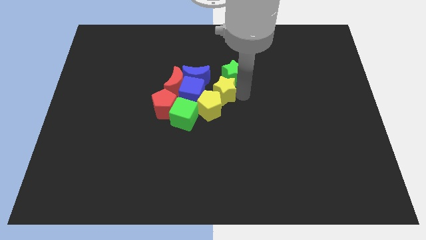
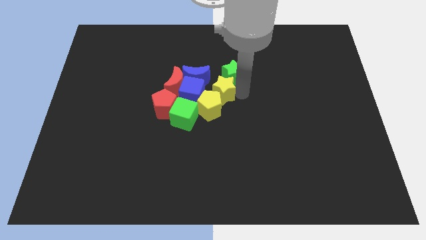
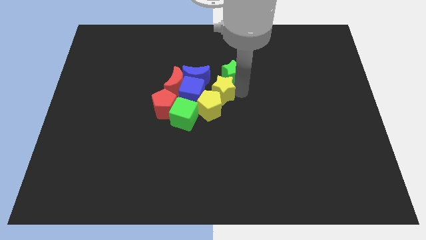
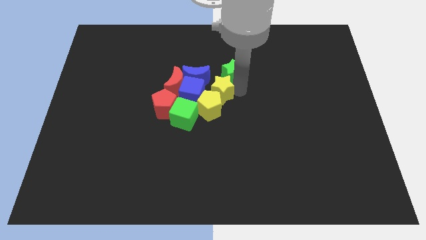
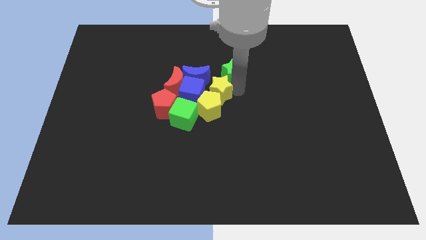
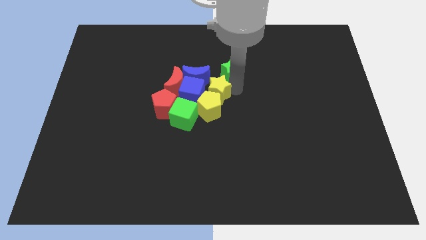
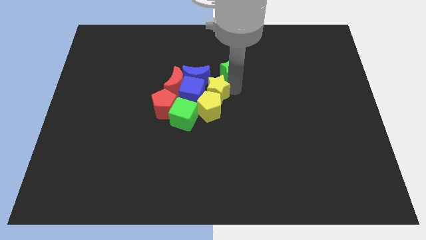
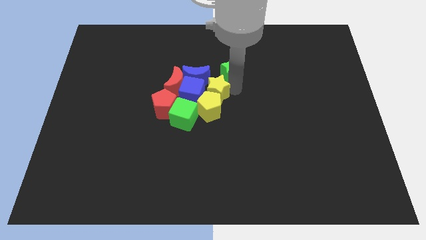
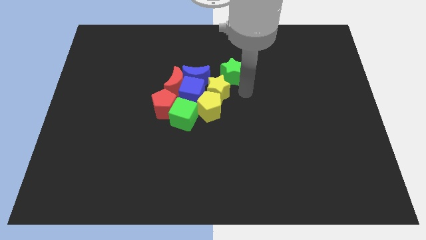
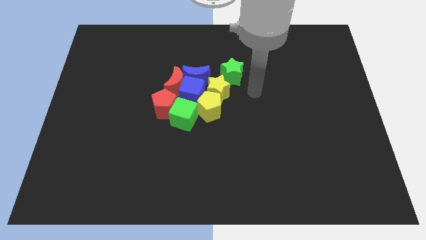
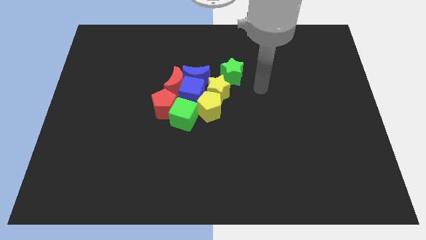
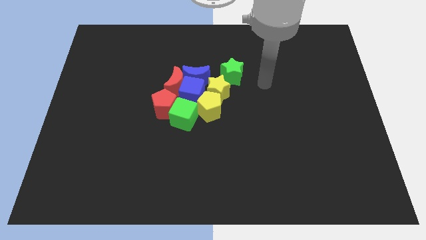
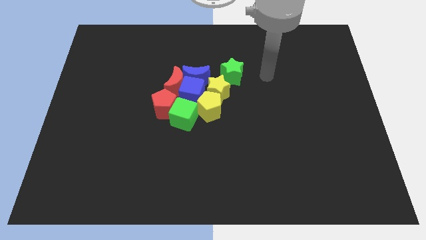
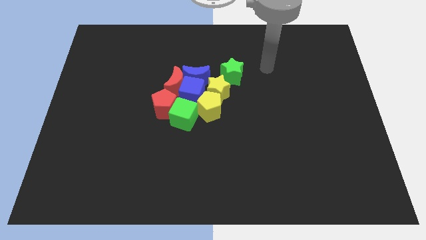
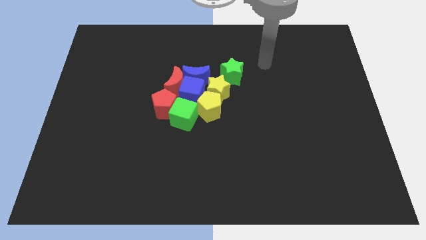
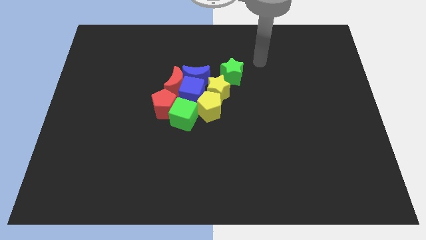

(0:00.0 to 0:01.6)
place the yellow star above the yellow pentagon

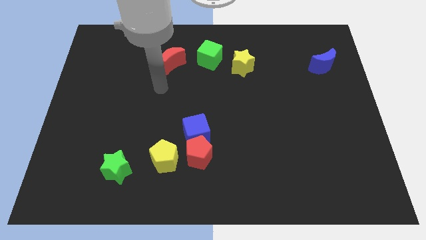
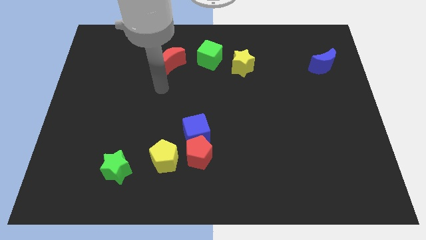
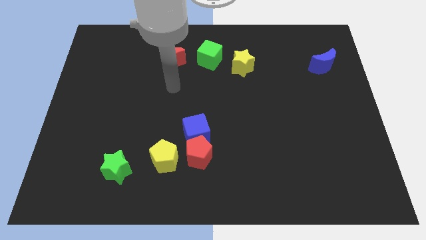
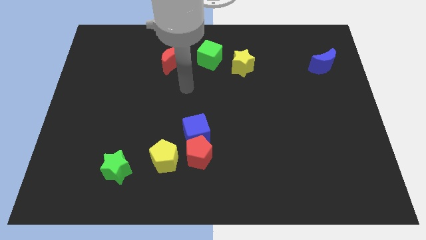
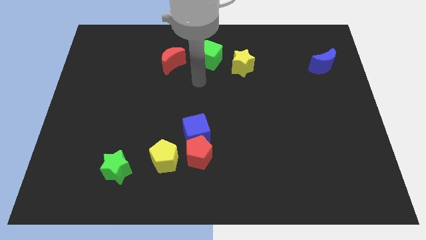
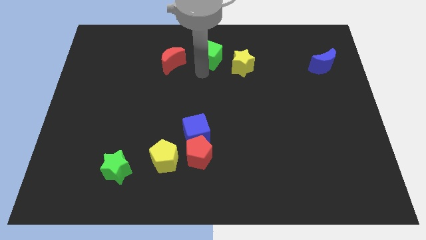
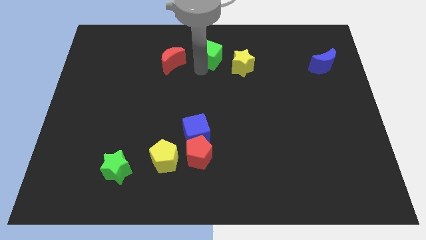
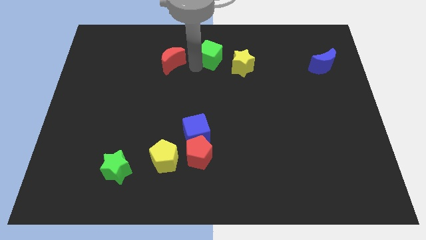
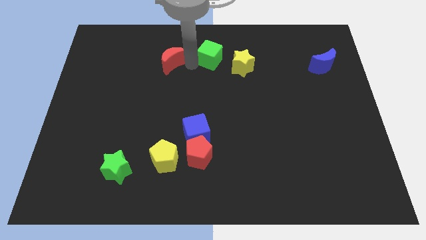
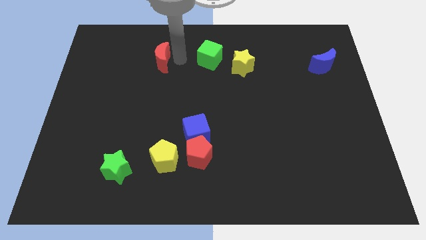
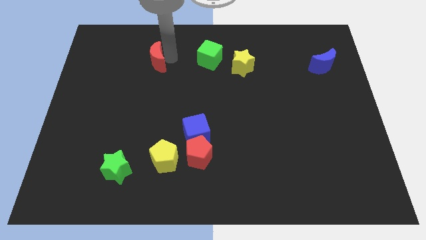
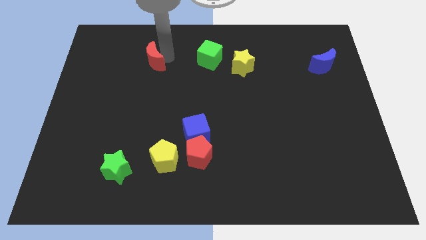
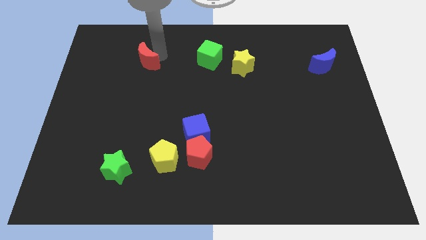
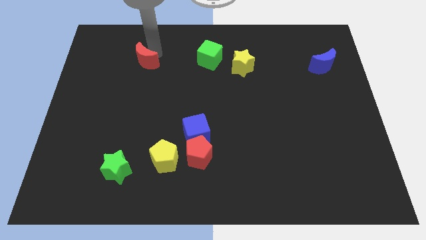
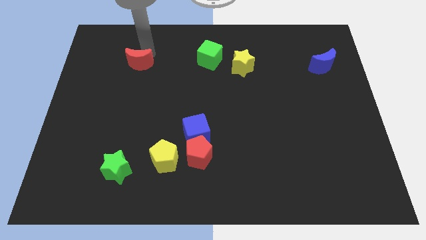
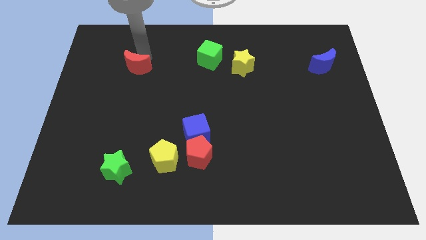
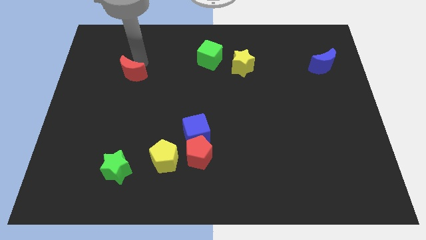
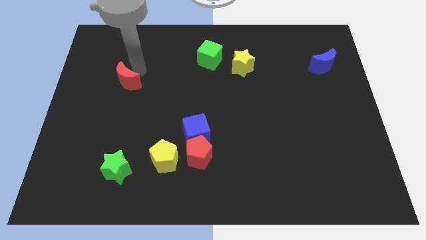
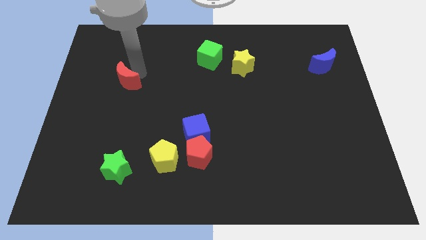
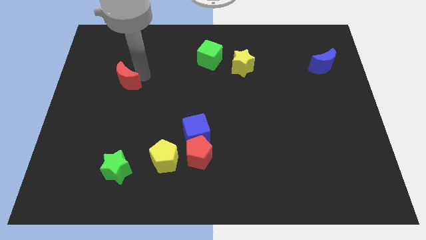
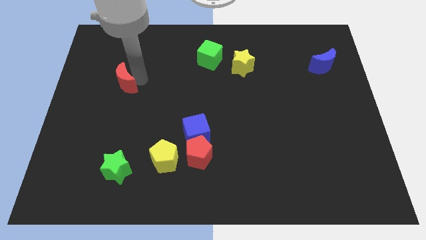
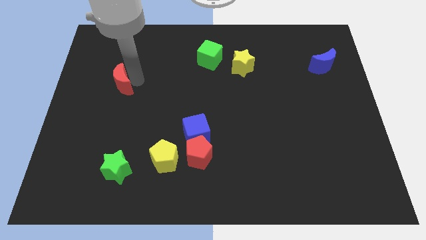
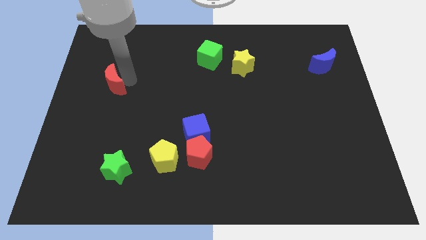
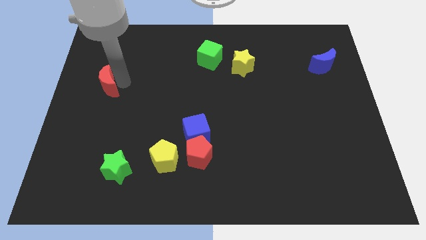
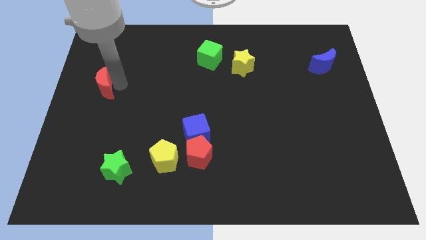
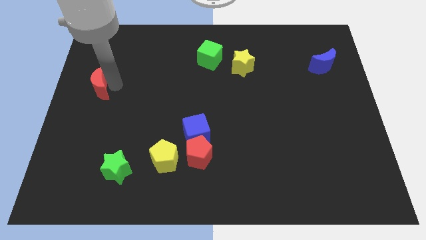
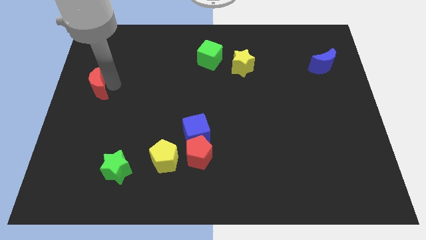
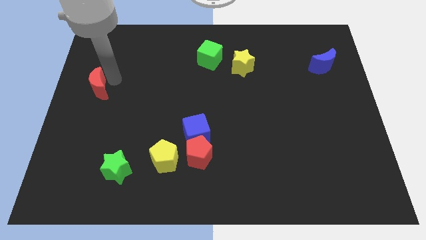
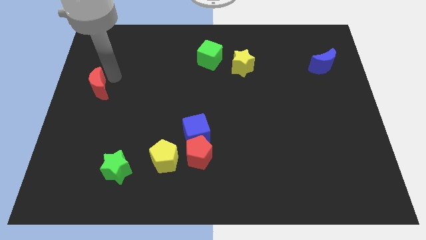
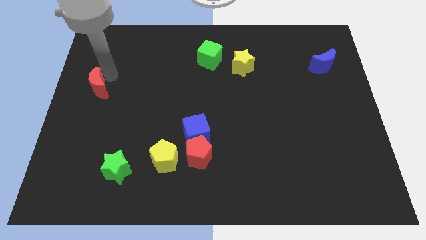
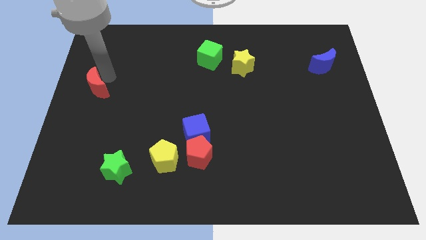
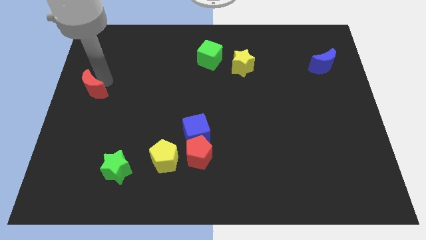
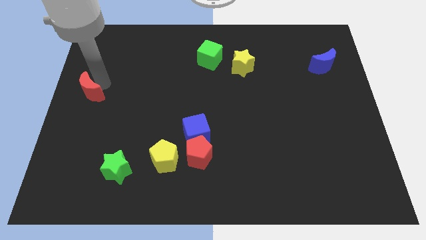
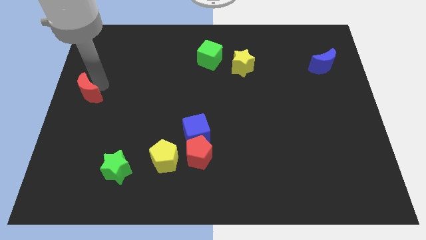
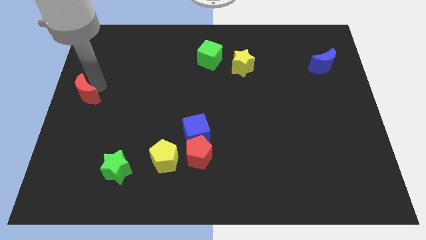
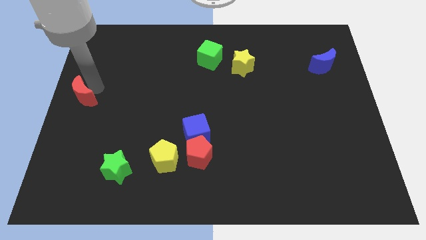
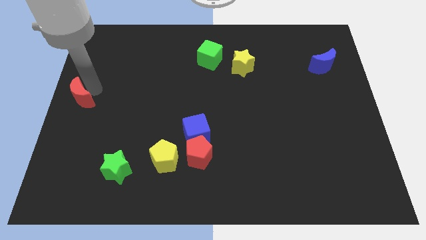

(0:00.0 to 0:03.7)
place the red moon at the center left side of the board

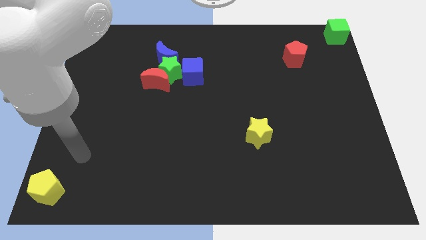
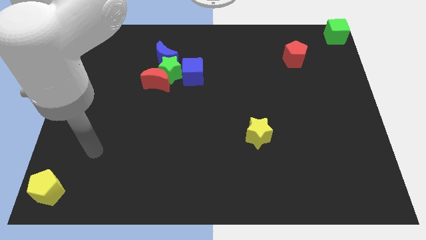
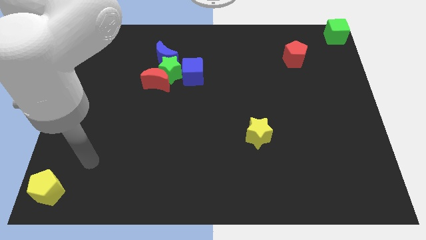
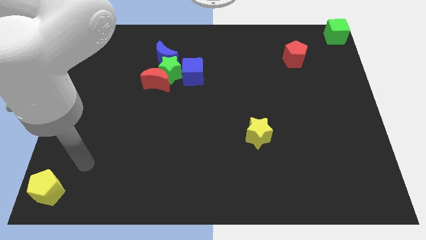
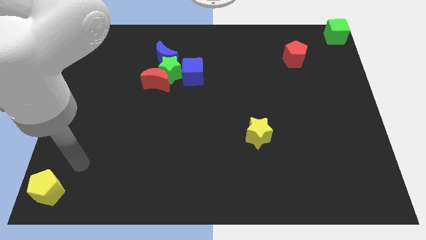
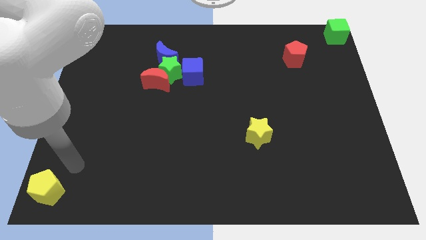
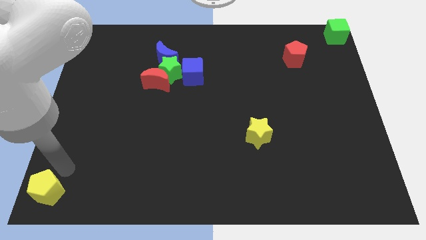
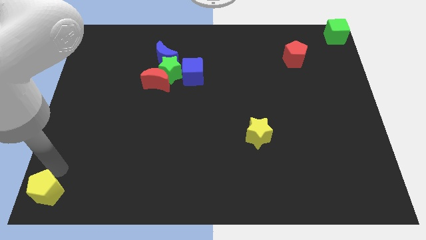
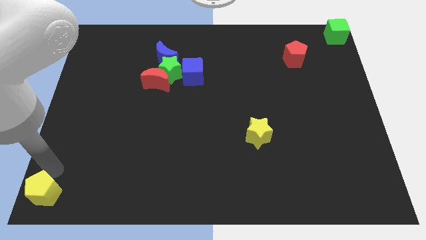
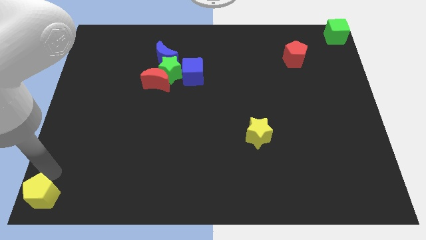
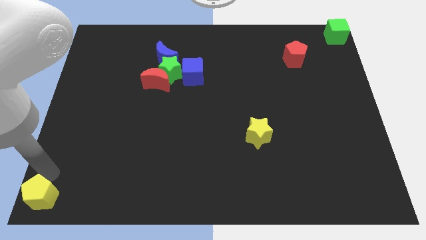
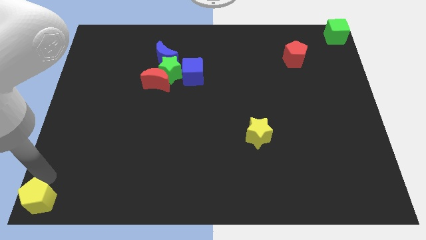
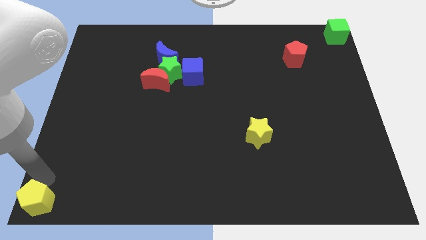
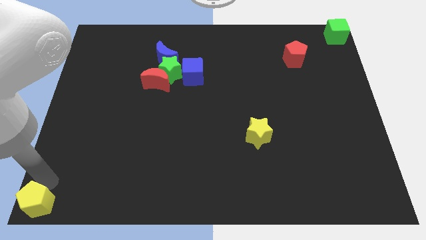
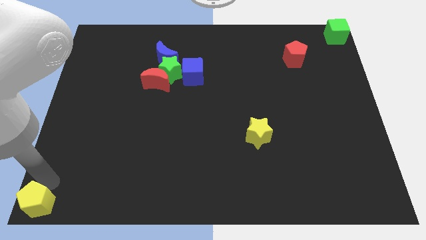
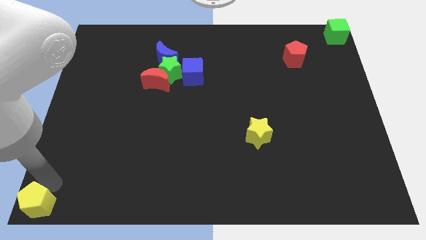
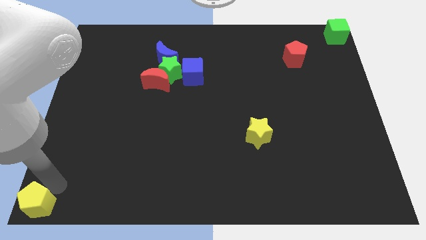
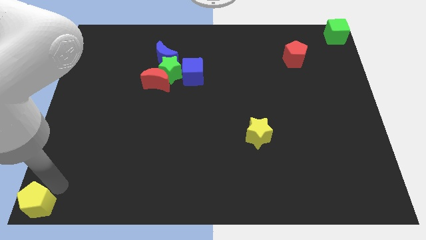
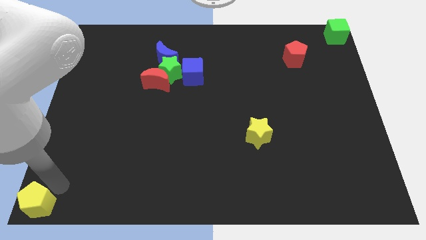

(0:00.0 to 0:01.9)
move the yellow pentagon to the bottom left

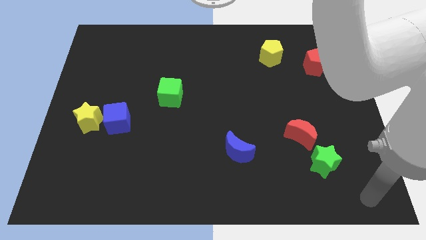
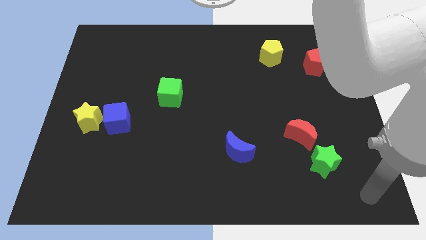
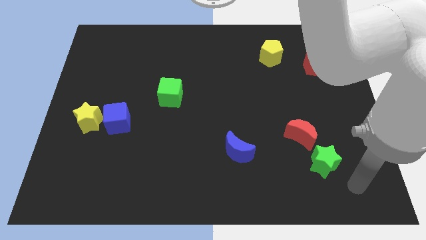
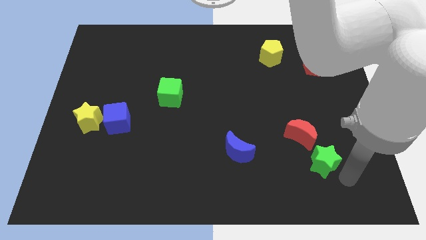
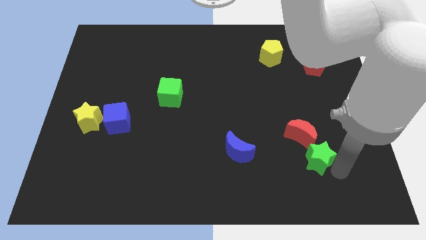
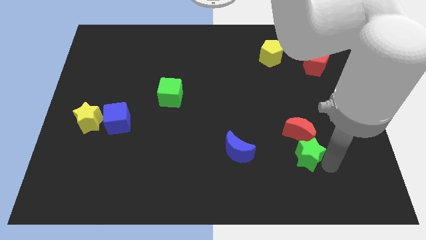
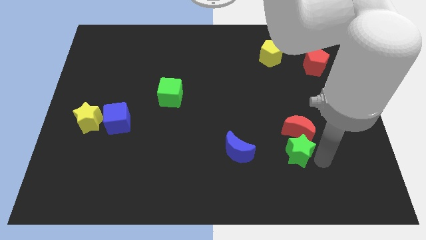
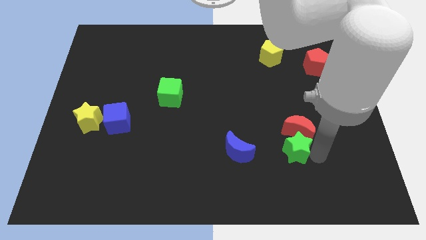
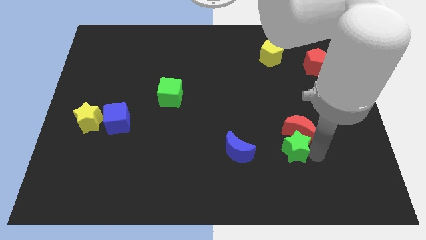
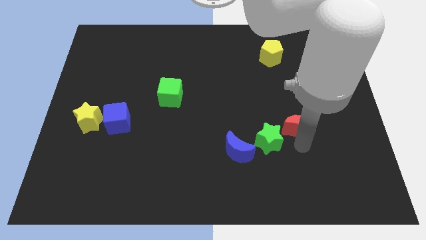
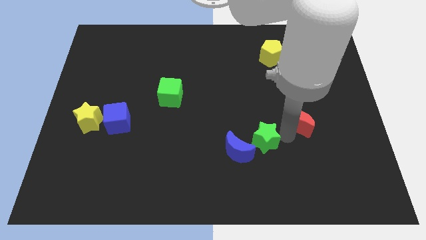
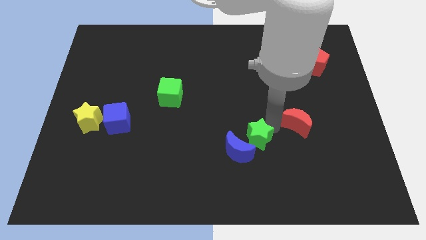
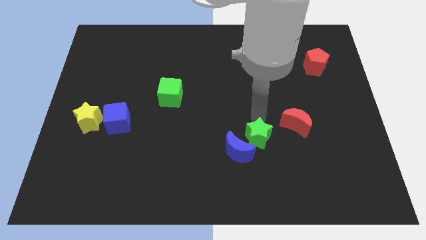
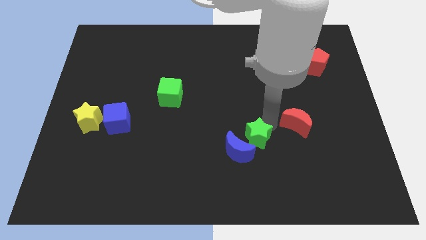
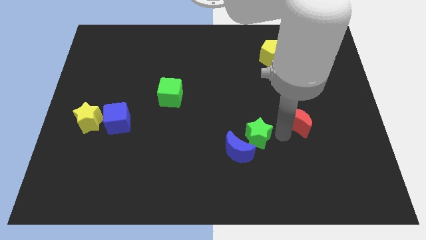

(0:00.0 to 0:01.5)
place the green star adjacent to blue crescent

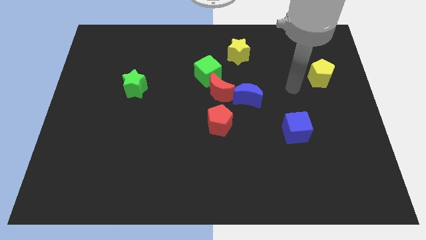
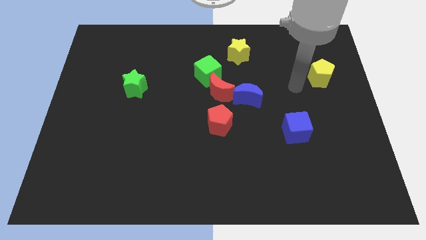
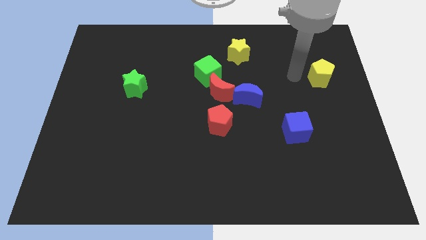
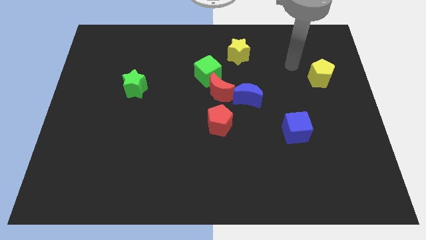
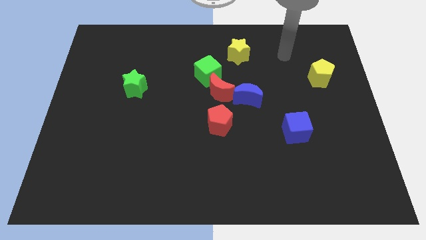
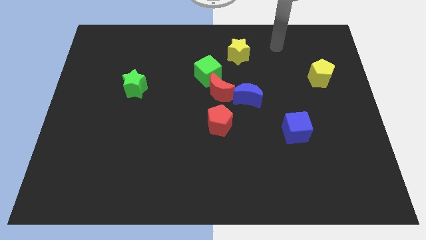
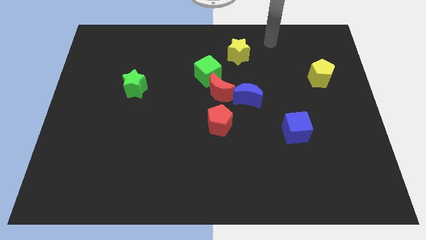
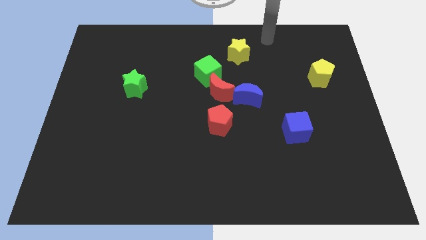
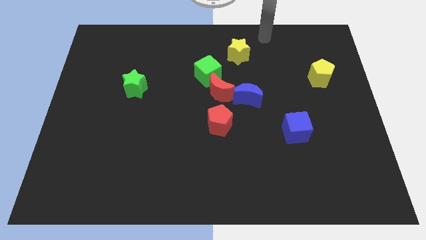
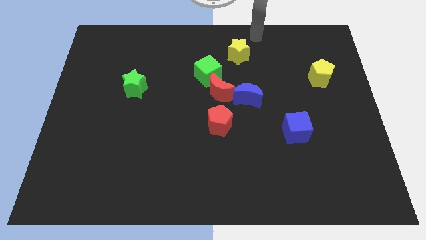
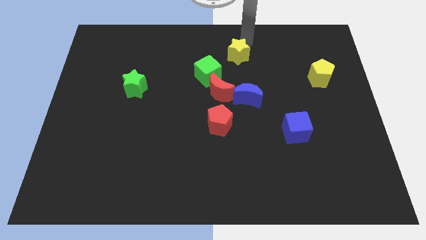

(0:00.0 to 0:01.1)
touch the yellow star with your arm
